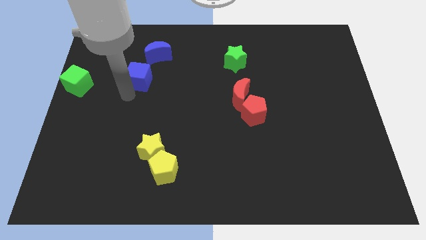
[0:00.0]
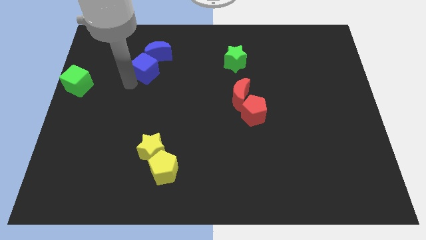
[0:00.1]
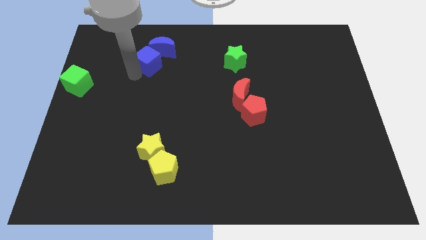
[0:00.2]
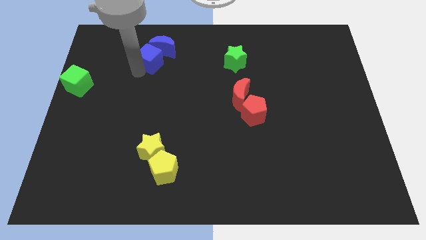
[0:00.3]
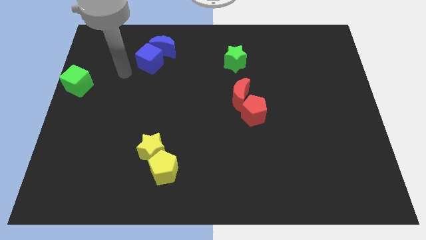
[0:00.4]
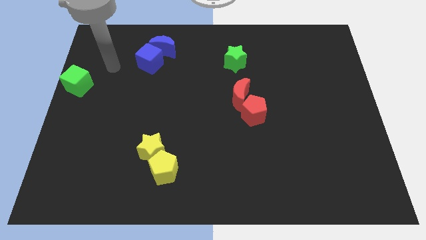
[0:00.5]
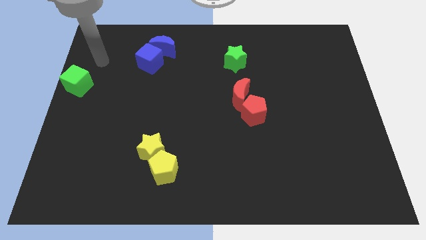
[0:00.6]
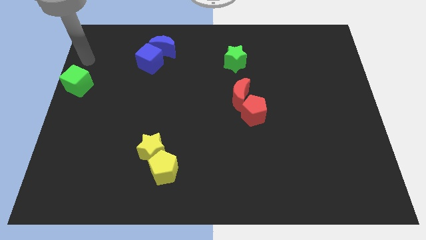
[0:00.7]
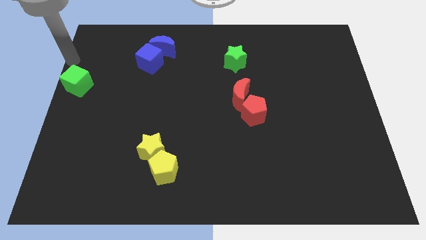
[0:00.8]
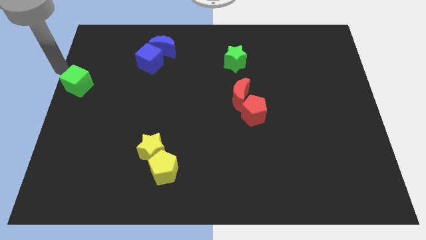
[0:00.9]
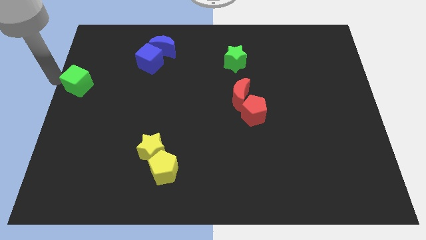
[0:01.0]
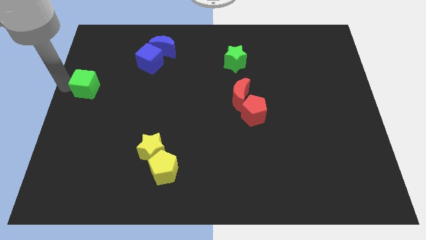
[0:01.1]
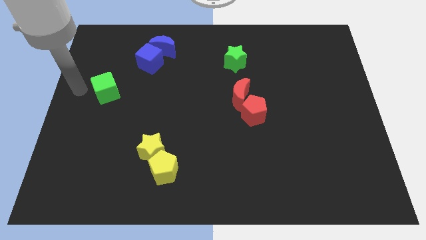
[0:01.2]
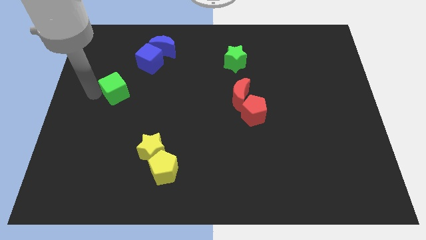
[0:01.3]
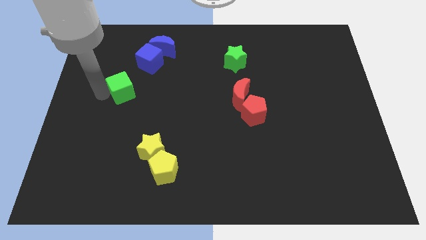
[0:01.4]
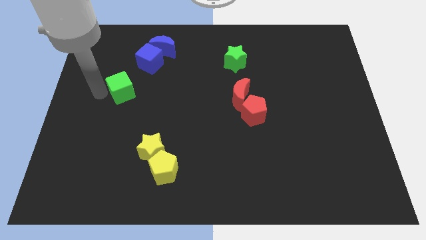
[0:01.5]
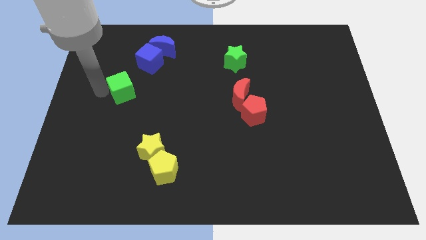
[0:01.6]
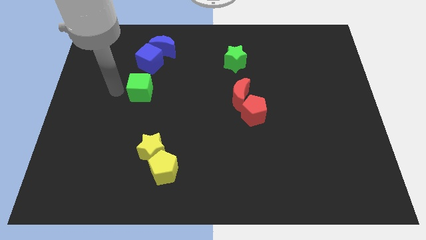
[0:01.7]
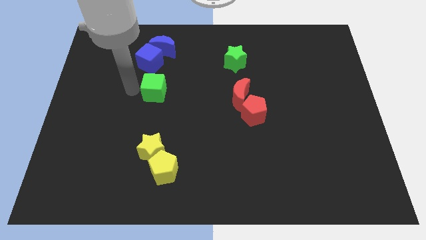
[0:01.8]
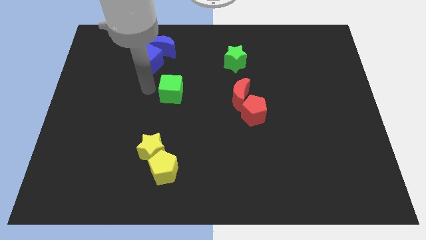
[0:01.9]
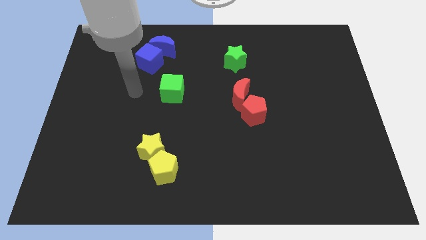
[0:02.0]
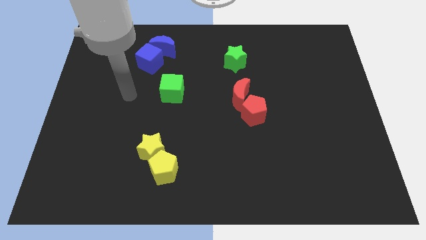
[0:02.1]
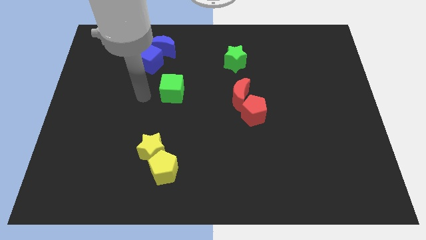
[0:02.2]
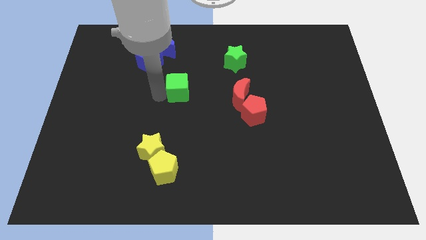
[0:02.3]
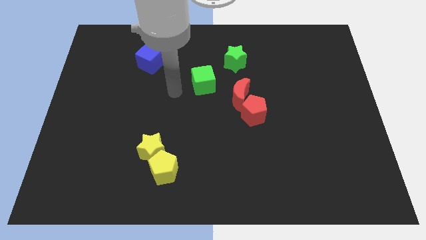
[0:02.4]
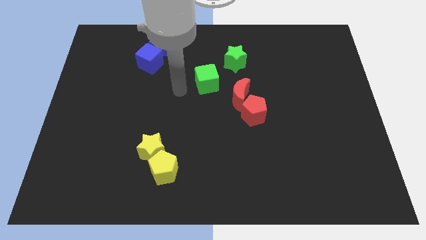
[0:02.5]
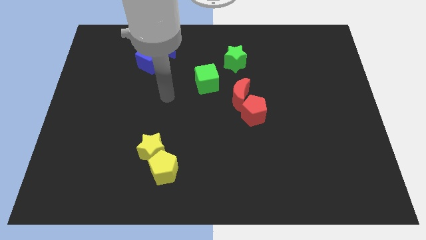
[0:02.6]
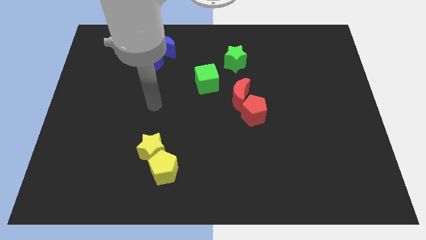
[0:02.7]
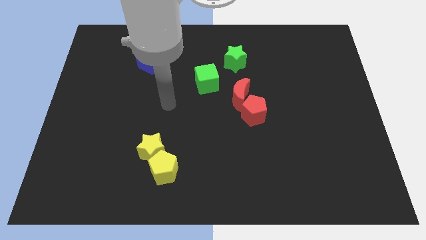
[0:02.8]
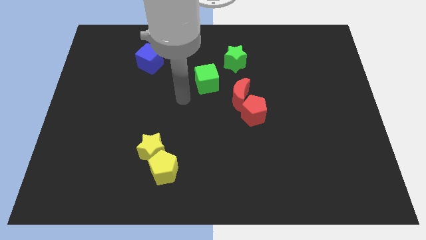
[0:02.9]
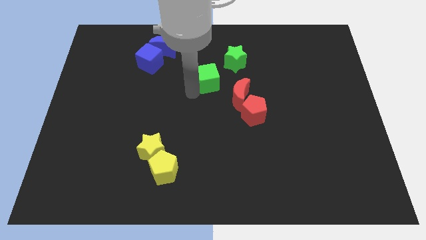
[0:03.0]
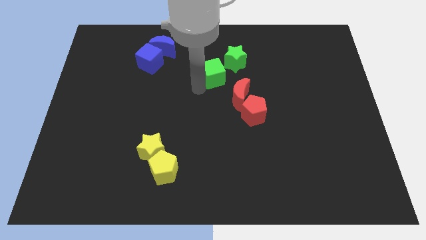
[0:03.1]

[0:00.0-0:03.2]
place the green cube diagonally top left to the red moon

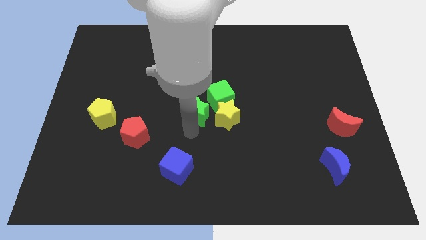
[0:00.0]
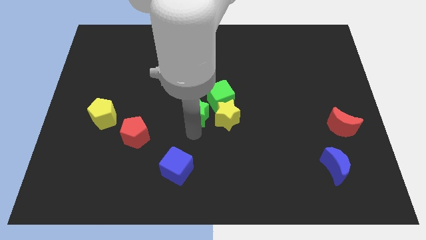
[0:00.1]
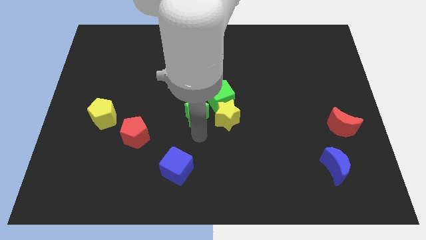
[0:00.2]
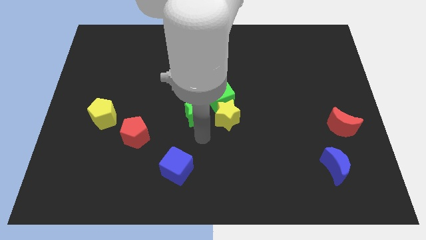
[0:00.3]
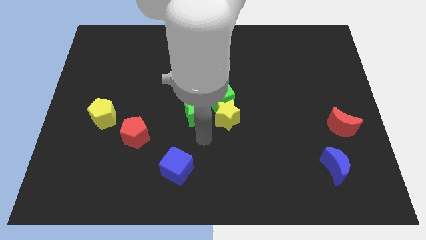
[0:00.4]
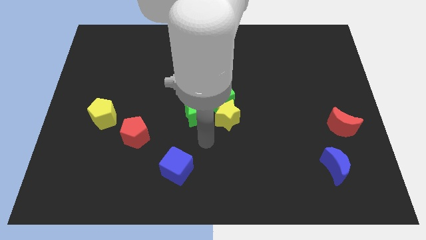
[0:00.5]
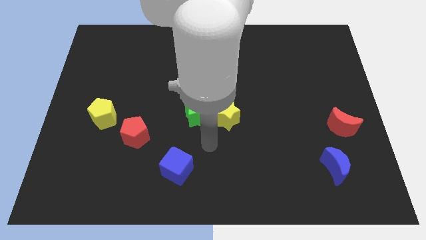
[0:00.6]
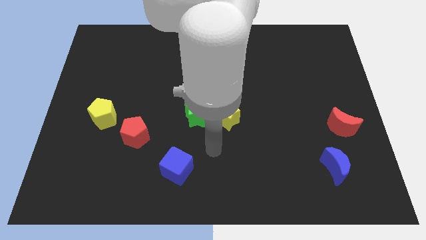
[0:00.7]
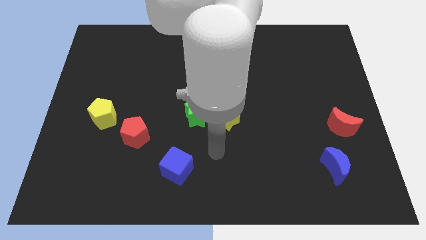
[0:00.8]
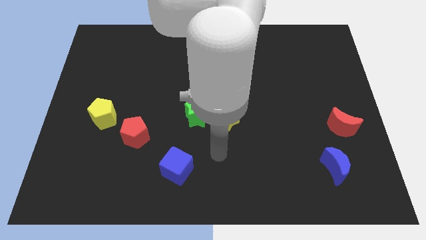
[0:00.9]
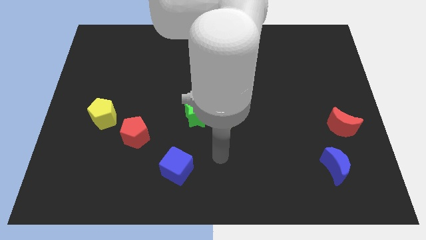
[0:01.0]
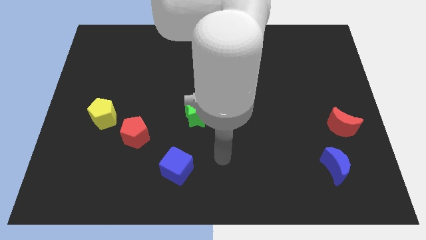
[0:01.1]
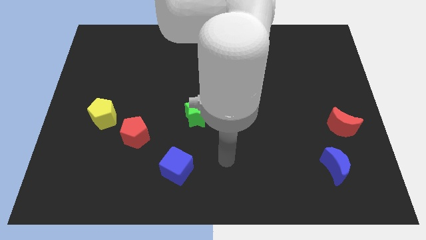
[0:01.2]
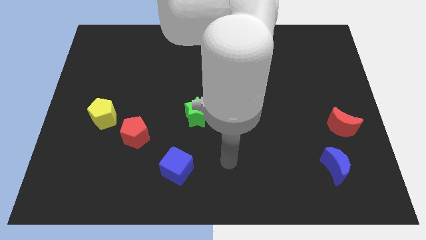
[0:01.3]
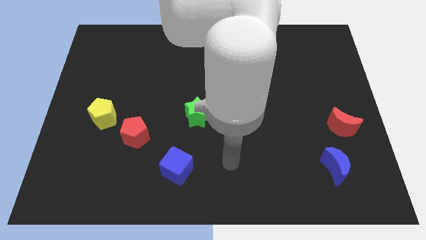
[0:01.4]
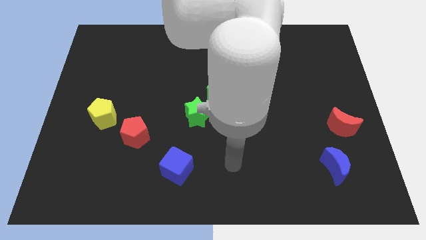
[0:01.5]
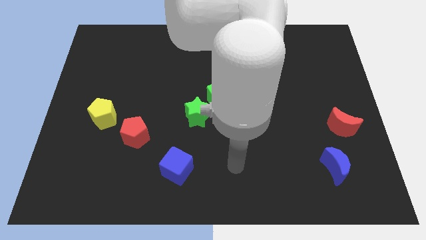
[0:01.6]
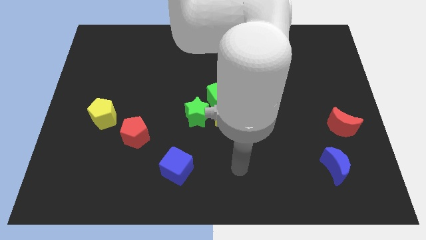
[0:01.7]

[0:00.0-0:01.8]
move the arm away from the green star

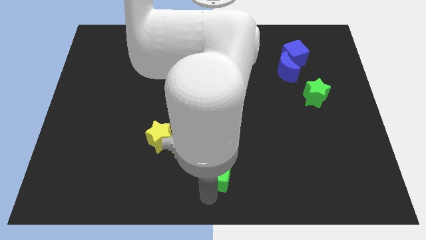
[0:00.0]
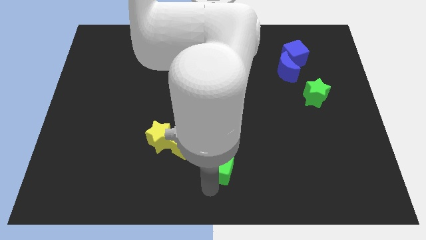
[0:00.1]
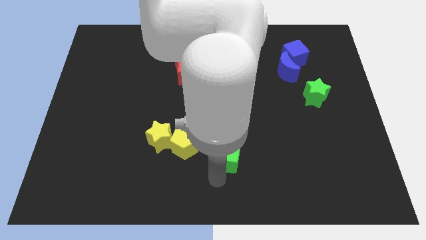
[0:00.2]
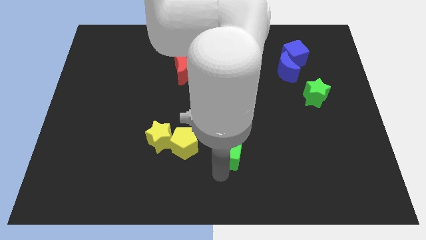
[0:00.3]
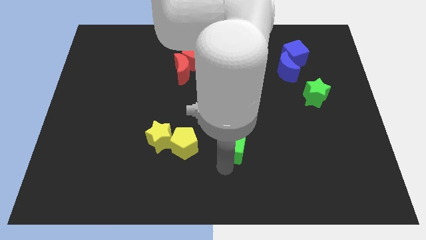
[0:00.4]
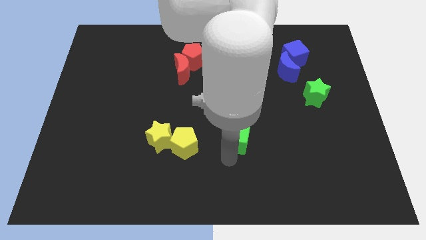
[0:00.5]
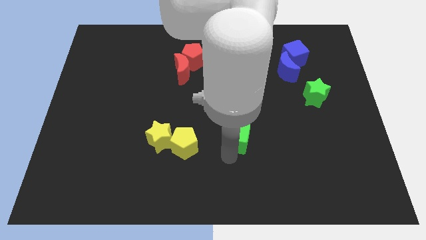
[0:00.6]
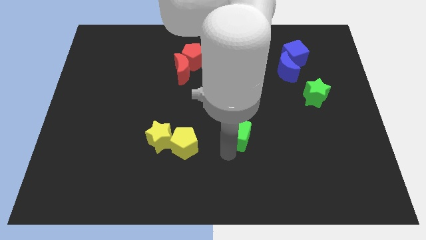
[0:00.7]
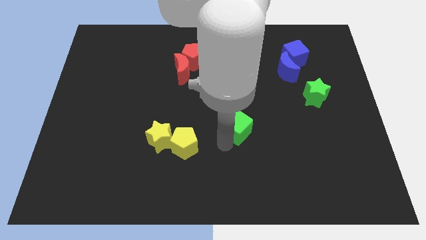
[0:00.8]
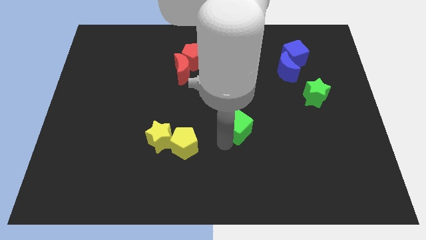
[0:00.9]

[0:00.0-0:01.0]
drag the green cube slightly upwards

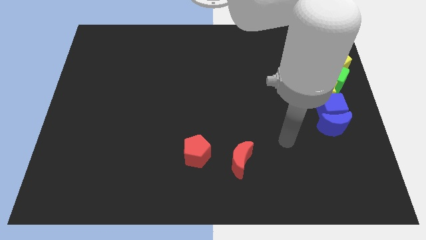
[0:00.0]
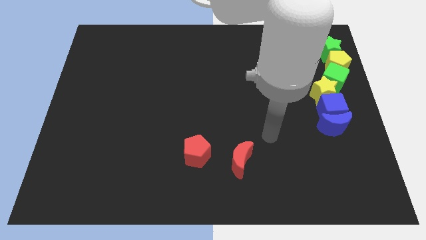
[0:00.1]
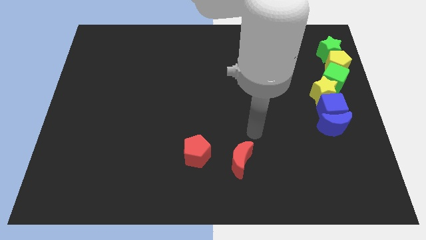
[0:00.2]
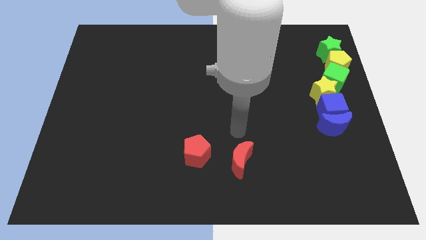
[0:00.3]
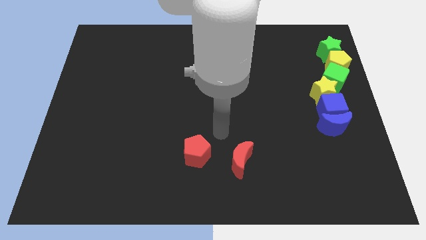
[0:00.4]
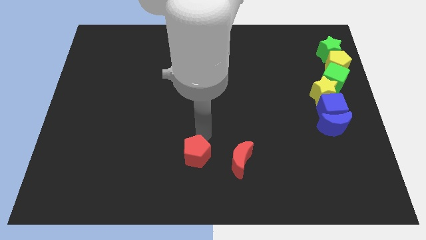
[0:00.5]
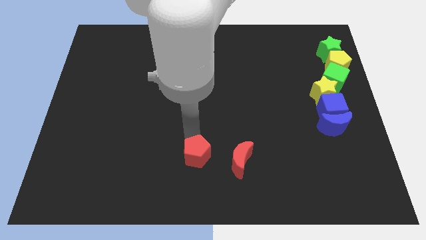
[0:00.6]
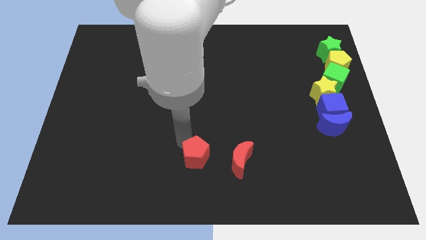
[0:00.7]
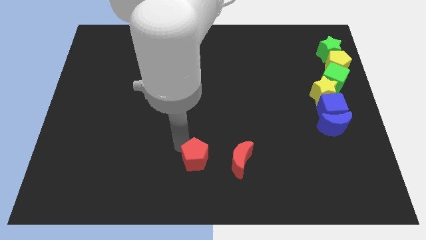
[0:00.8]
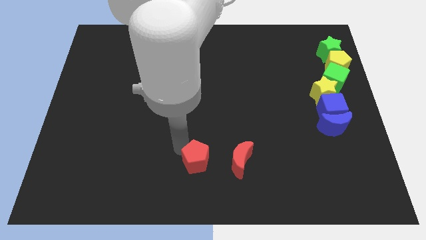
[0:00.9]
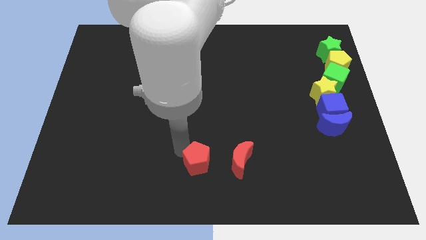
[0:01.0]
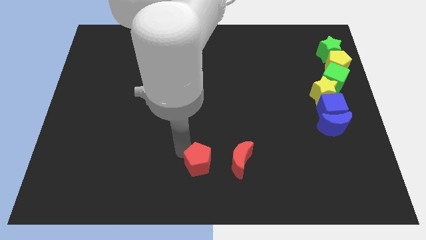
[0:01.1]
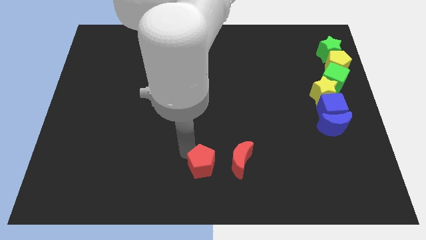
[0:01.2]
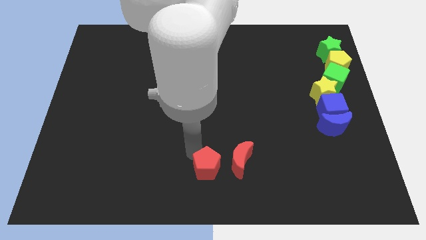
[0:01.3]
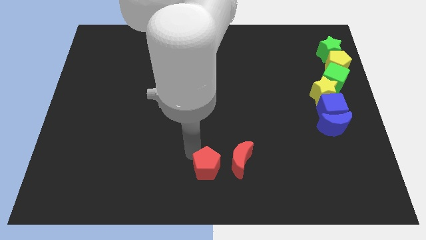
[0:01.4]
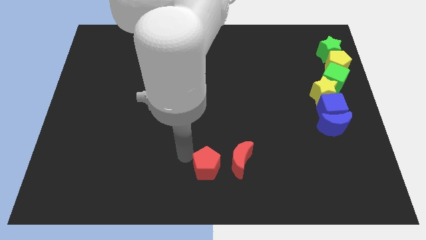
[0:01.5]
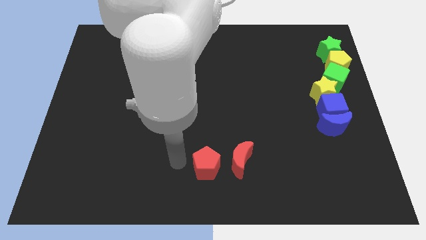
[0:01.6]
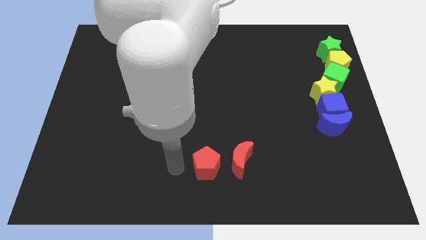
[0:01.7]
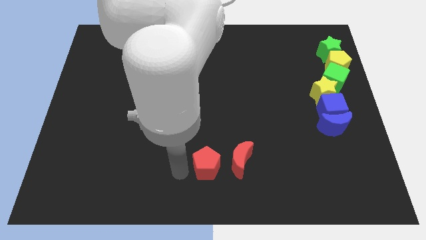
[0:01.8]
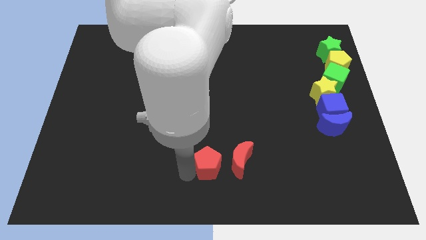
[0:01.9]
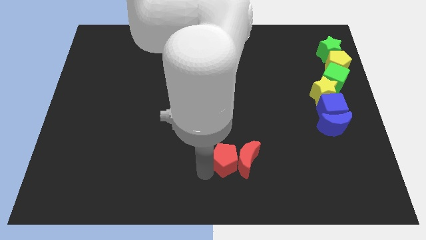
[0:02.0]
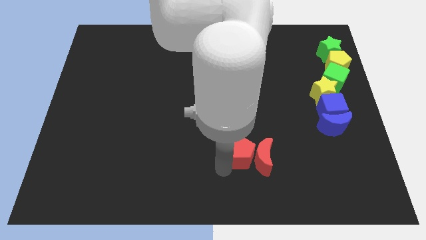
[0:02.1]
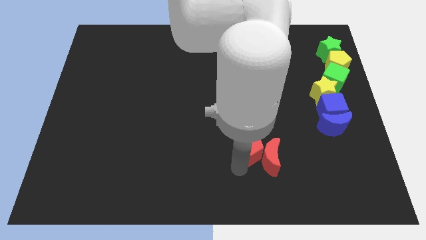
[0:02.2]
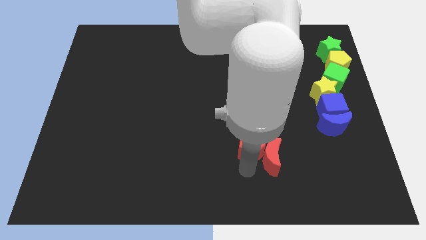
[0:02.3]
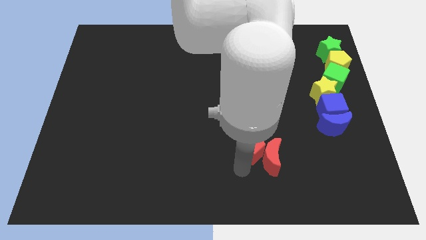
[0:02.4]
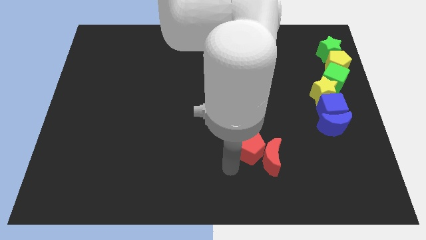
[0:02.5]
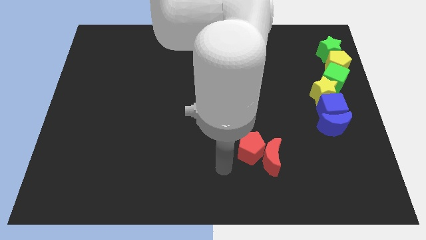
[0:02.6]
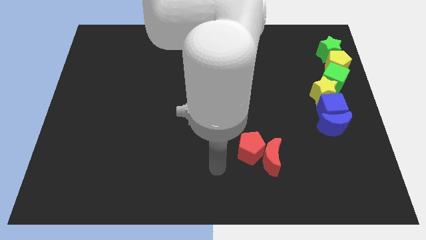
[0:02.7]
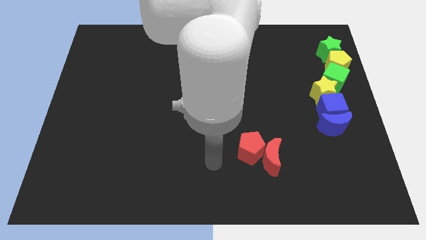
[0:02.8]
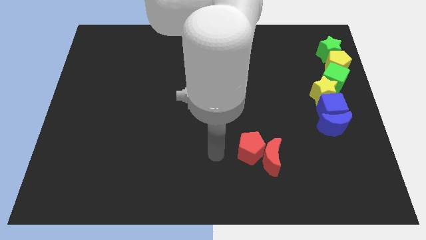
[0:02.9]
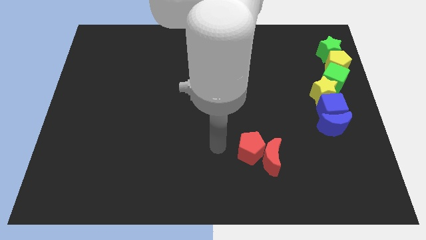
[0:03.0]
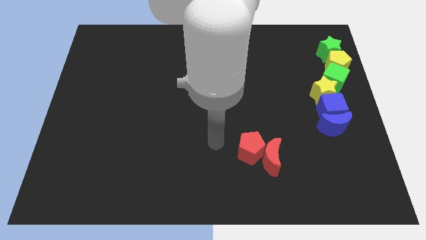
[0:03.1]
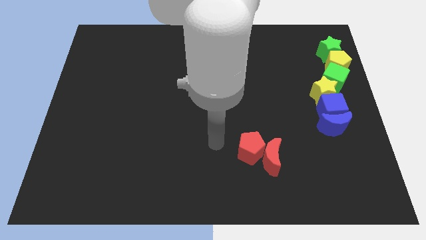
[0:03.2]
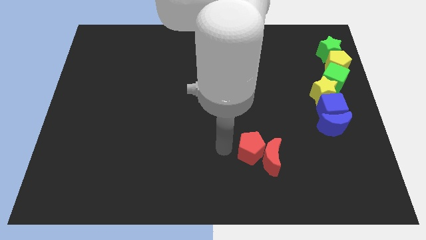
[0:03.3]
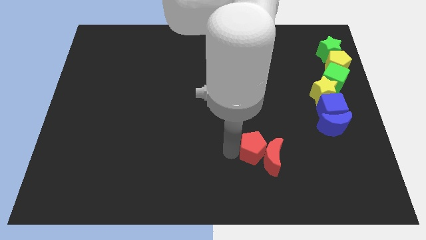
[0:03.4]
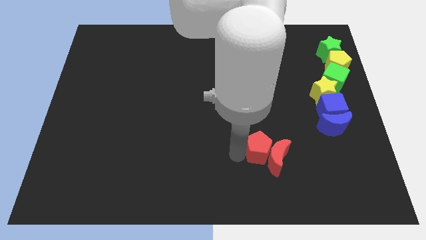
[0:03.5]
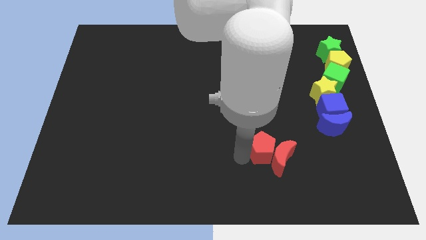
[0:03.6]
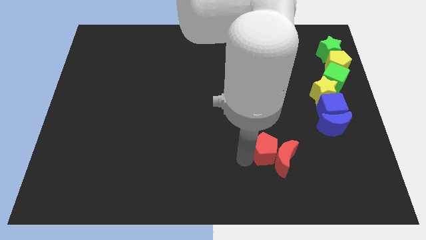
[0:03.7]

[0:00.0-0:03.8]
push the red pentagon into red crescent
